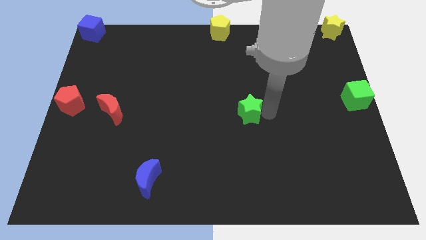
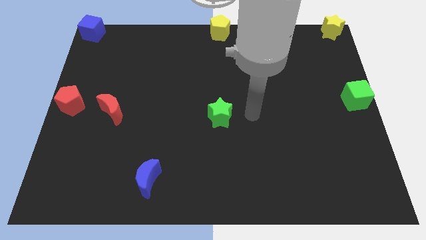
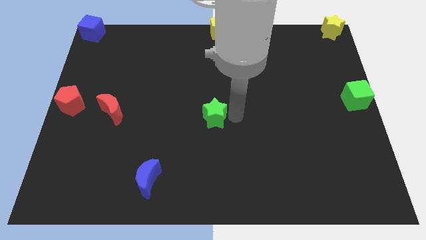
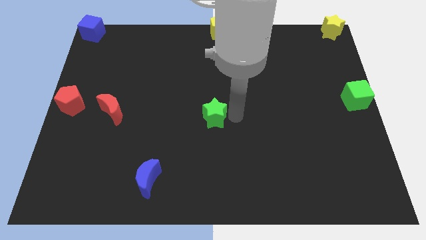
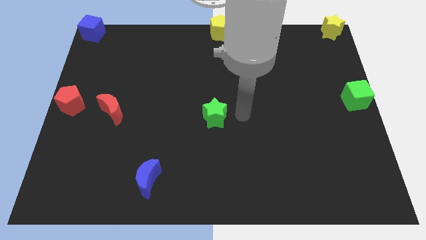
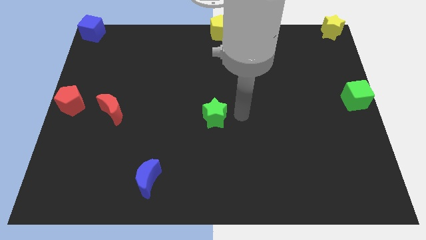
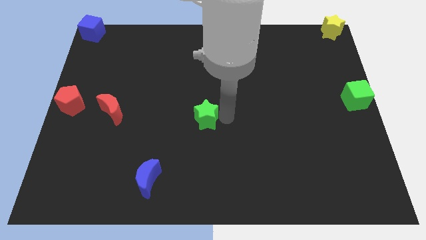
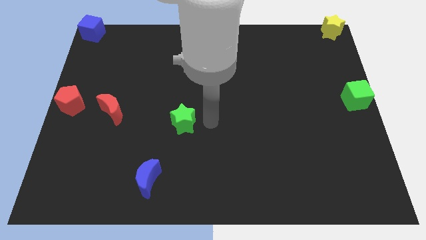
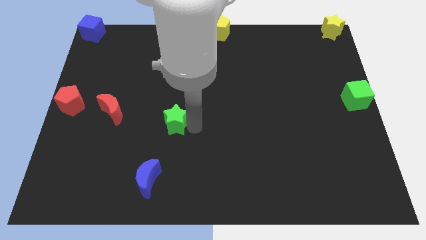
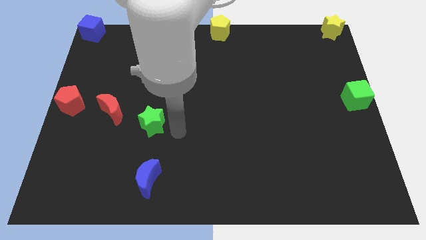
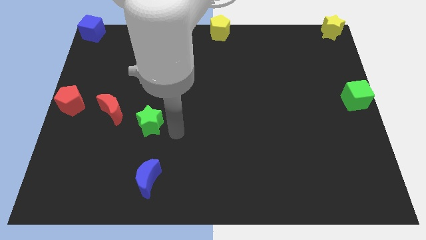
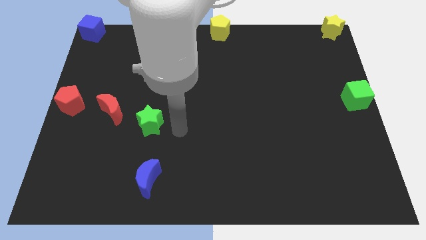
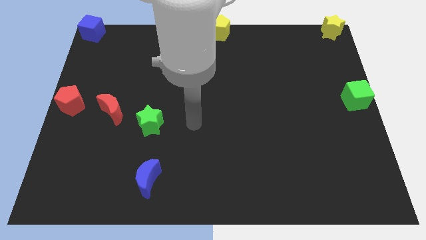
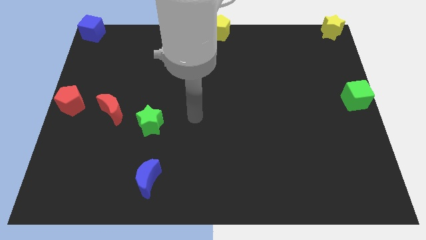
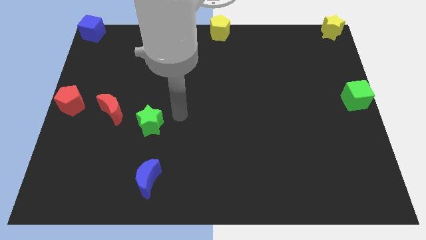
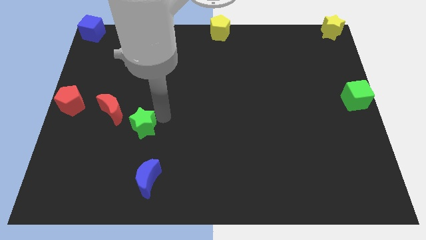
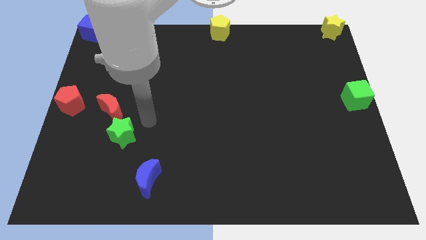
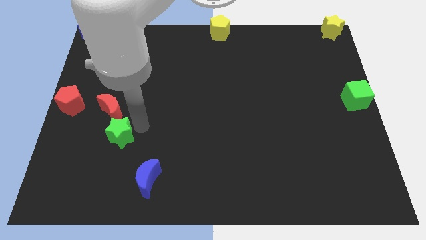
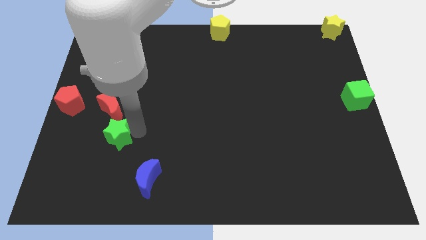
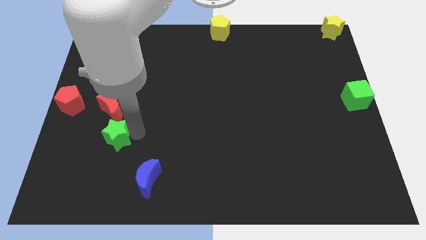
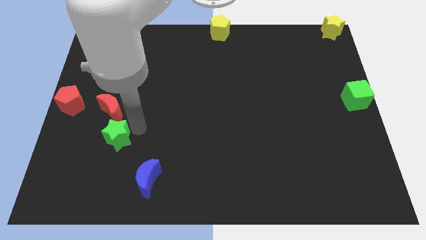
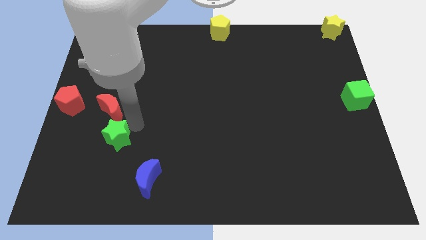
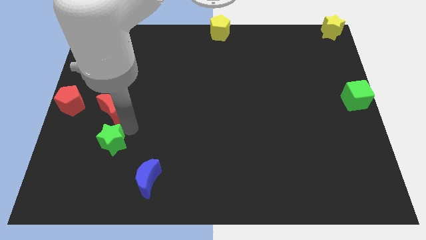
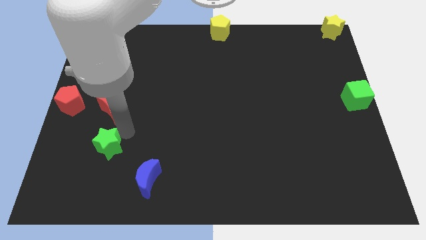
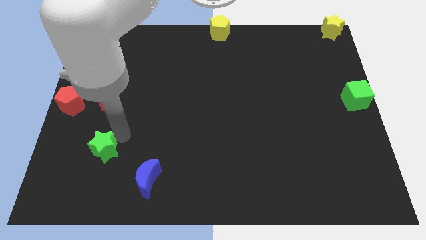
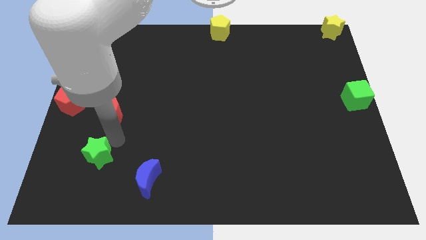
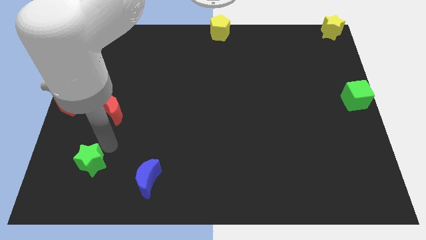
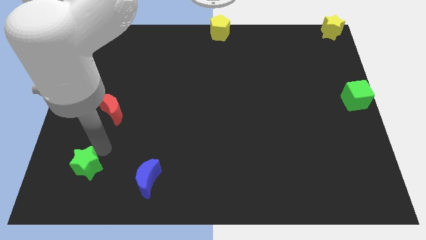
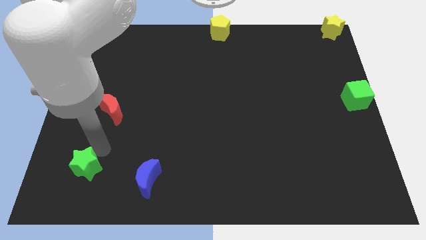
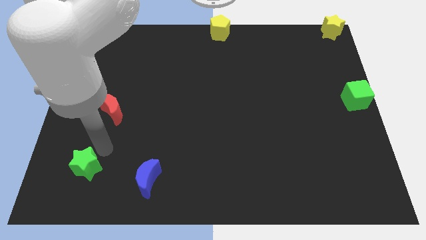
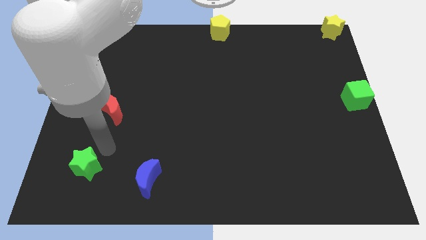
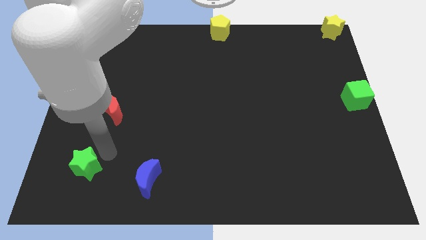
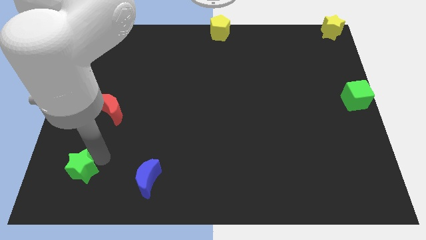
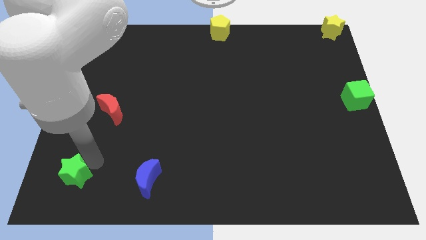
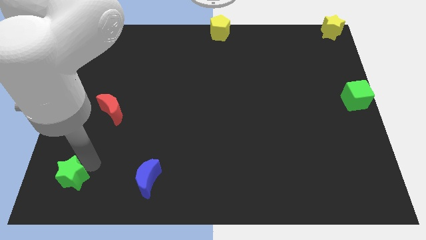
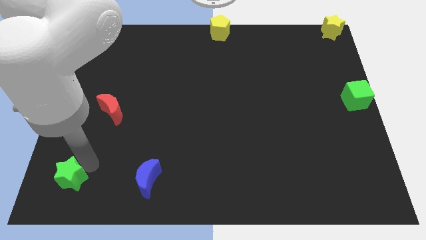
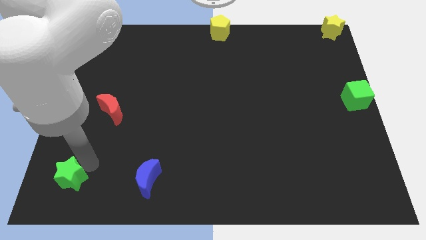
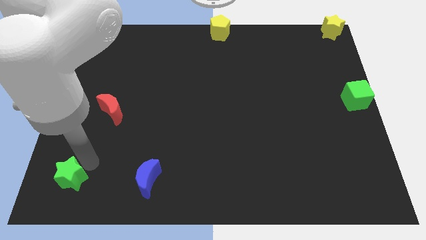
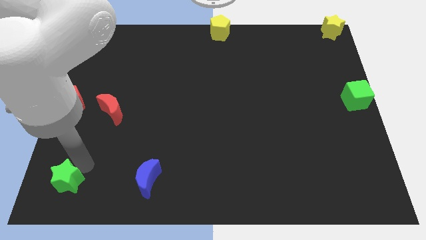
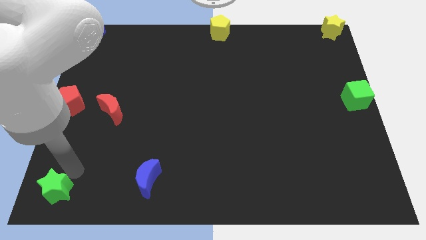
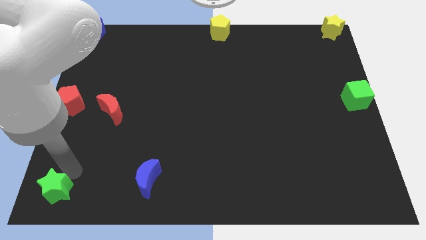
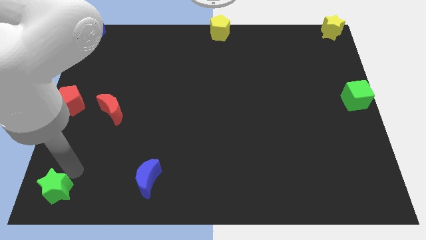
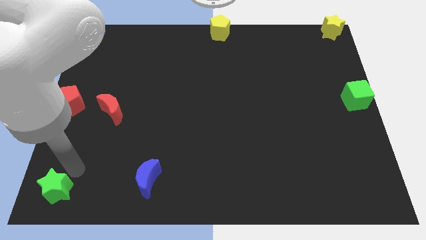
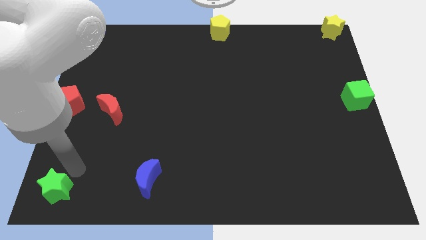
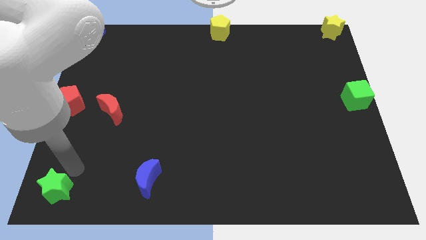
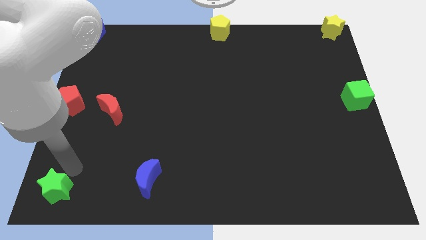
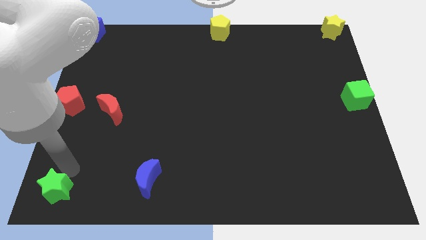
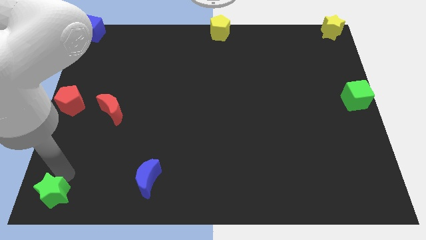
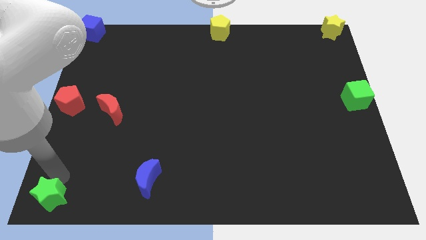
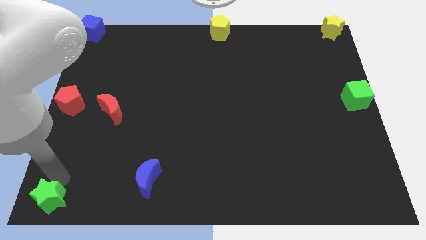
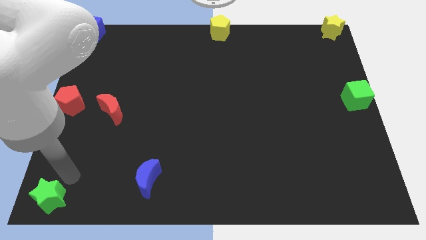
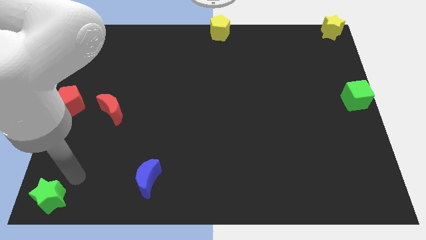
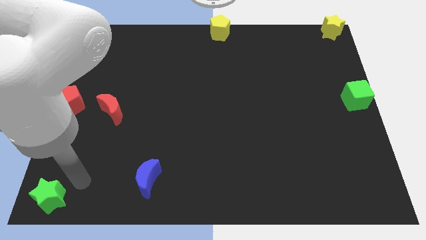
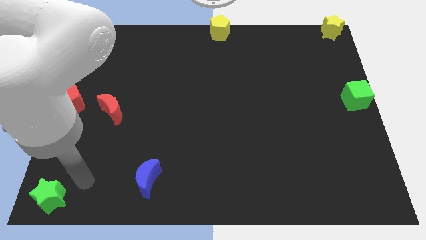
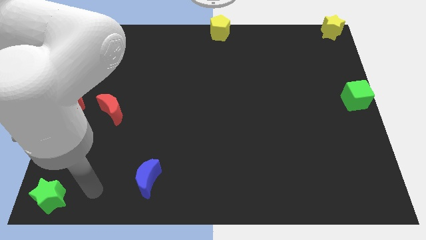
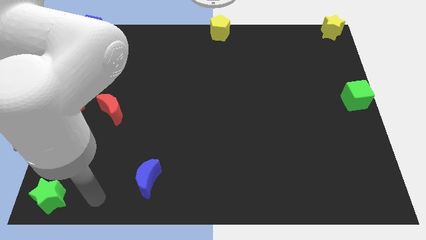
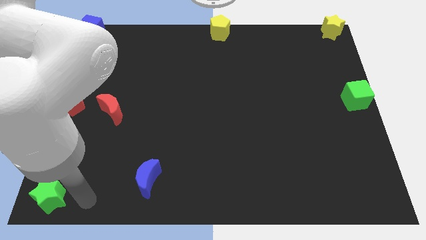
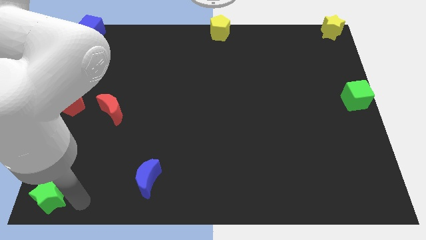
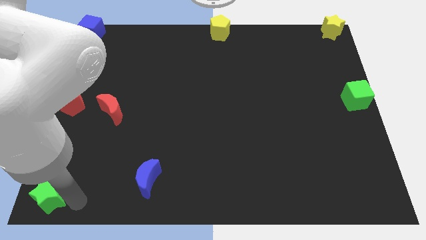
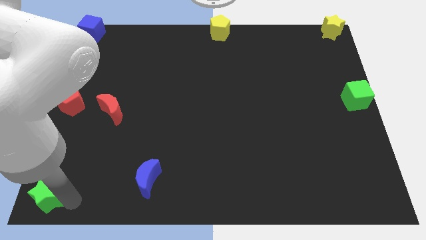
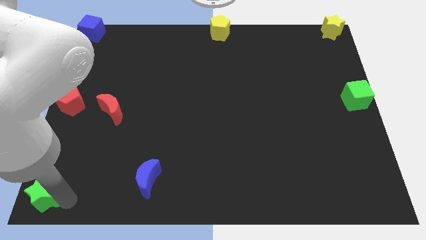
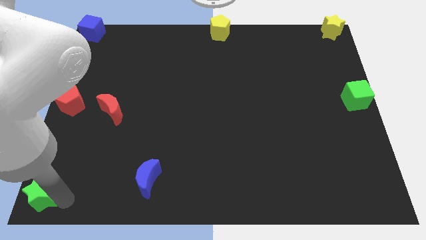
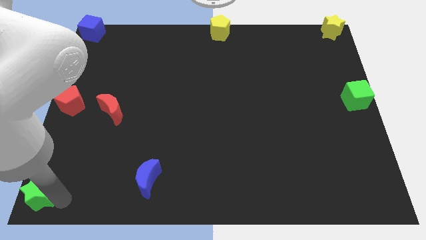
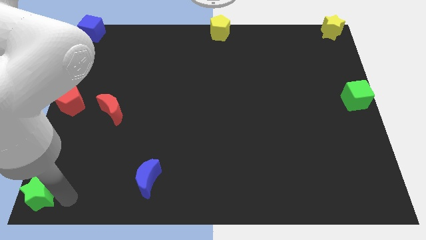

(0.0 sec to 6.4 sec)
drag green star towards bottom left side

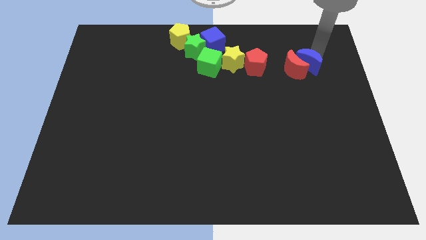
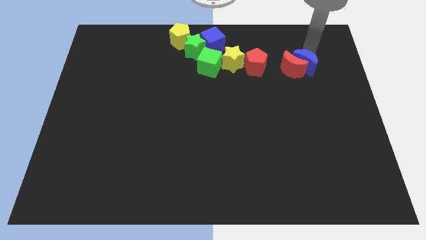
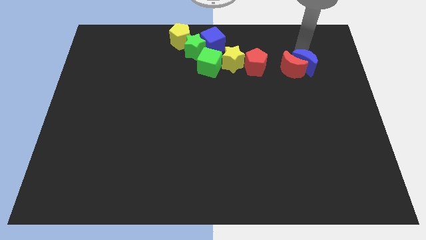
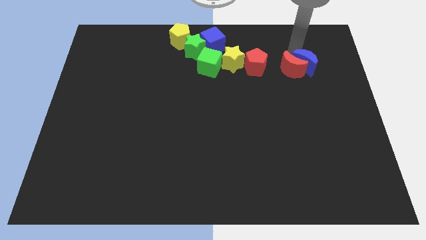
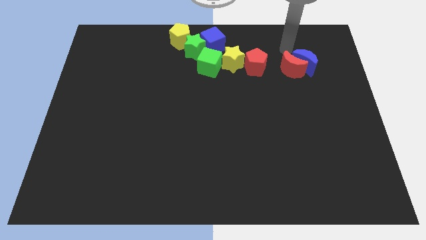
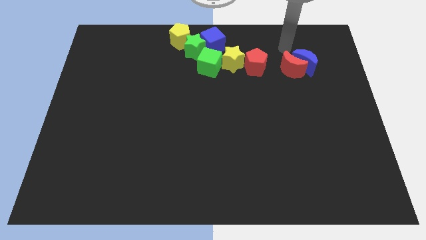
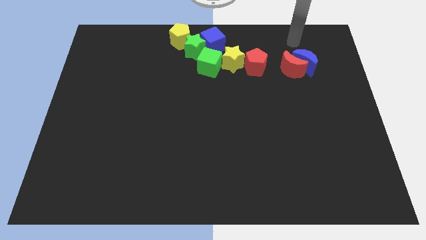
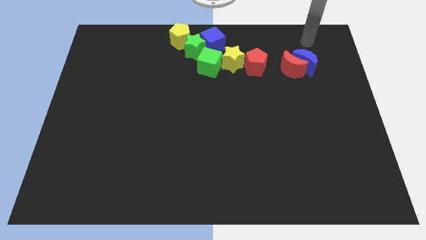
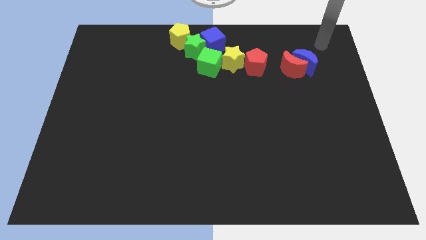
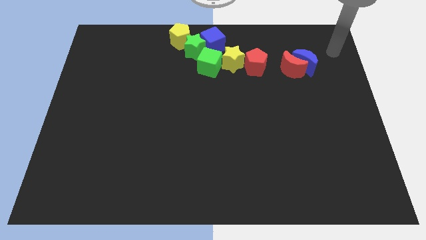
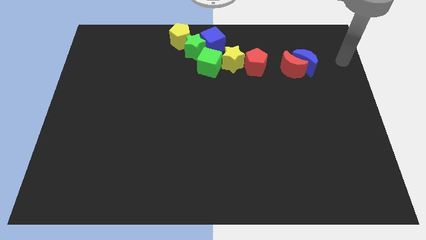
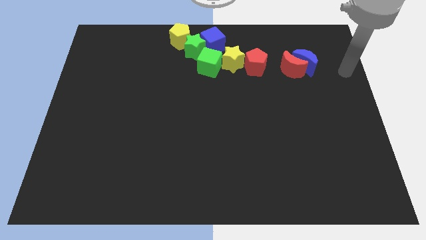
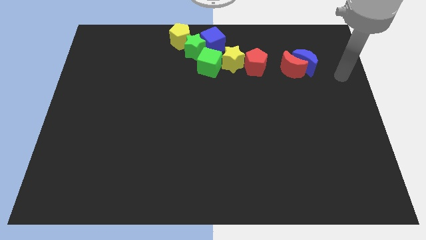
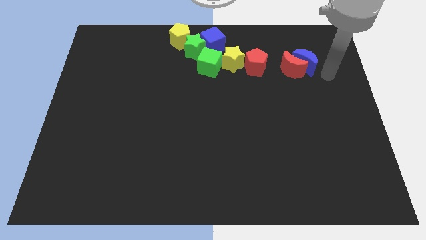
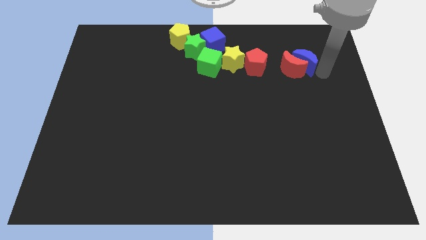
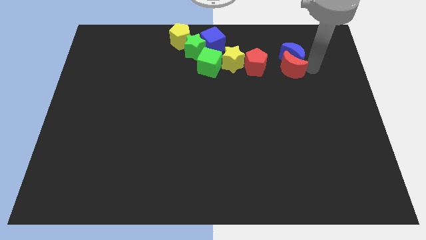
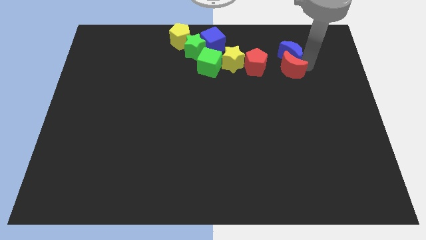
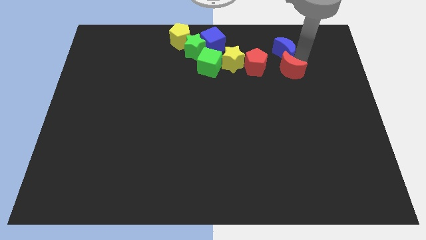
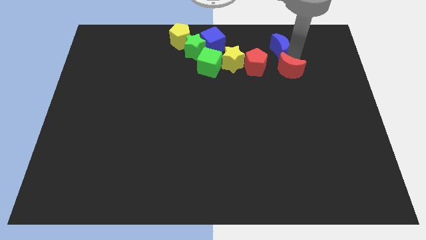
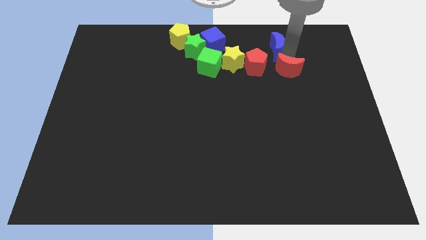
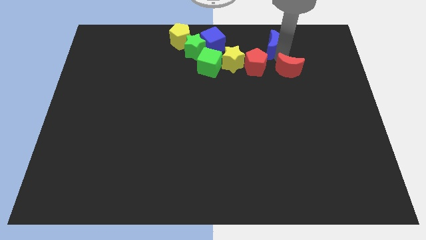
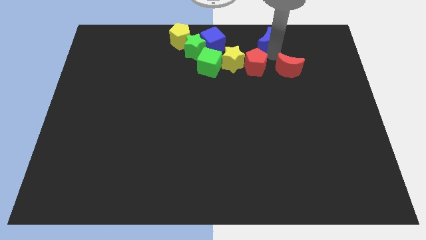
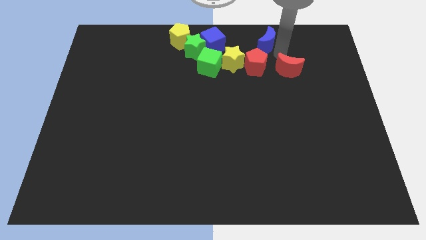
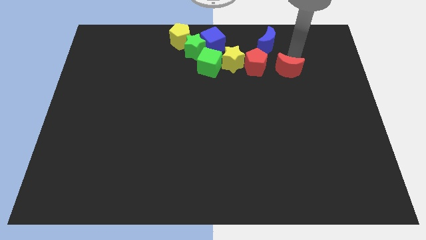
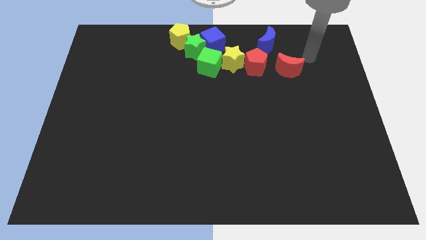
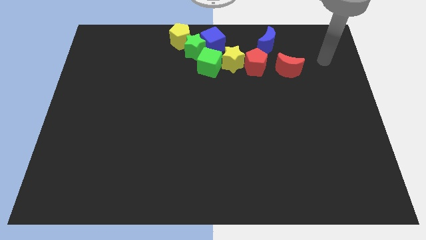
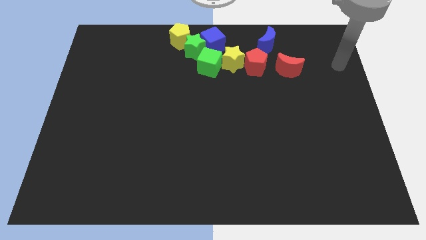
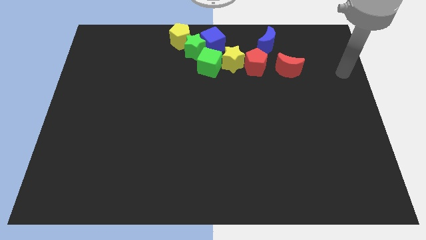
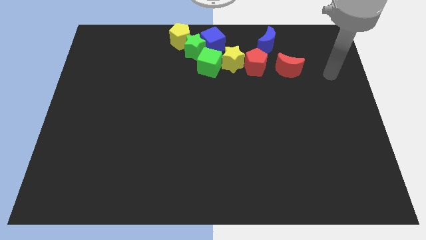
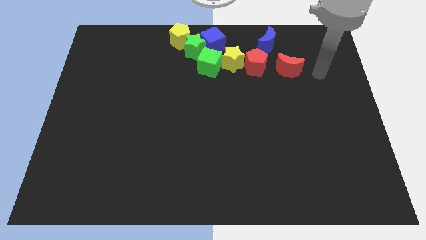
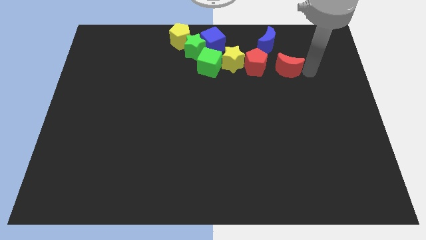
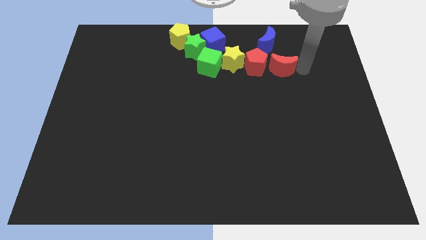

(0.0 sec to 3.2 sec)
push blue moon on top of red pentagon
